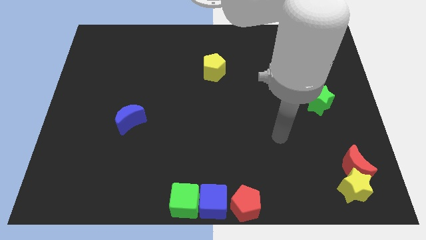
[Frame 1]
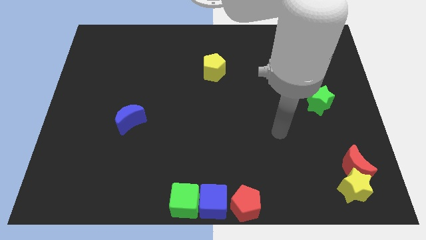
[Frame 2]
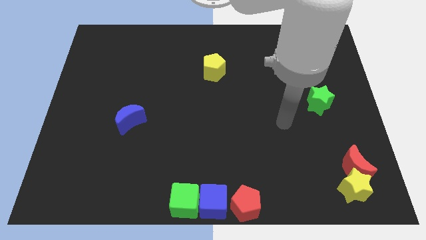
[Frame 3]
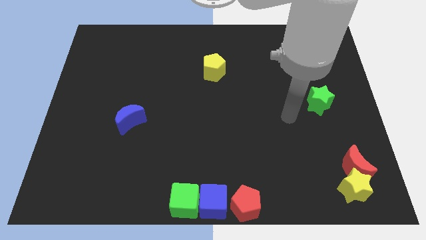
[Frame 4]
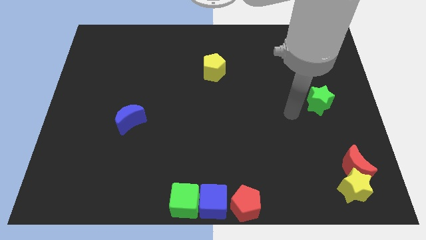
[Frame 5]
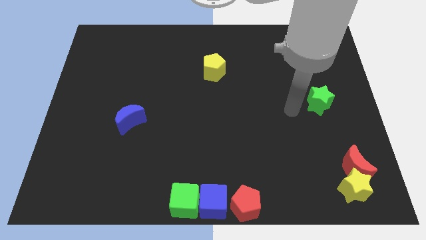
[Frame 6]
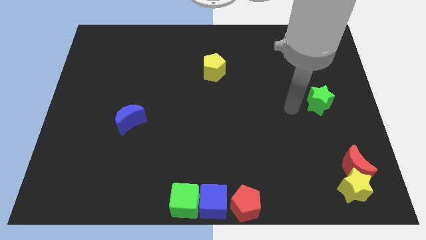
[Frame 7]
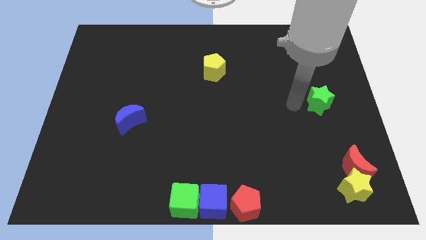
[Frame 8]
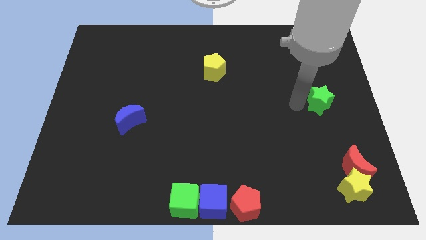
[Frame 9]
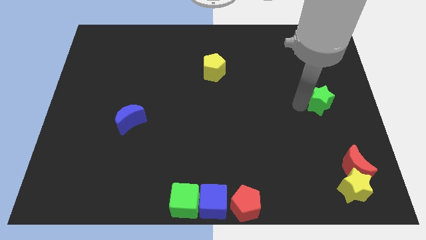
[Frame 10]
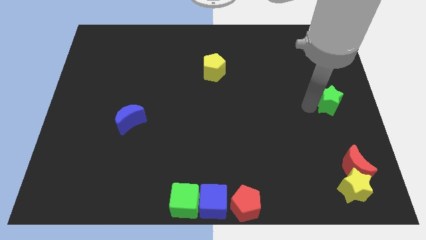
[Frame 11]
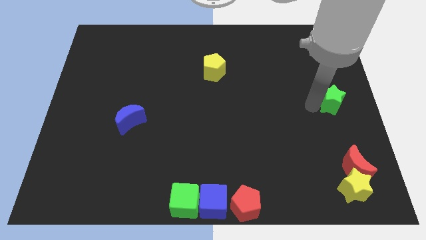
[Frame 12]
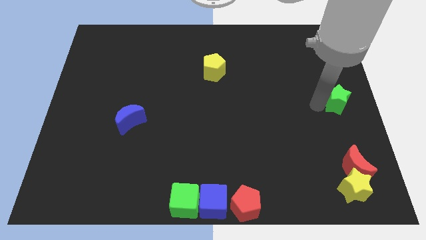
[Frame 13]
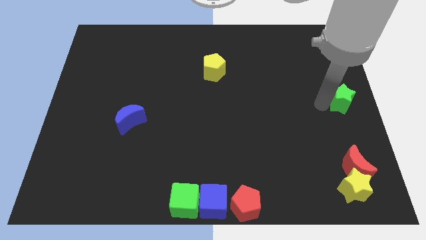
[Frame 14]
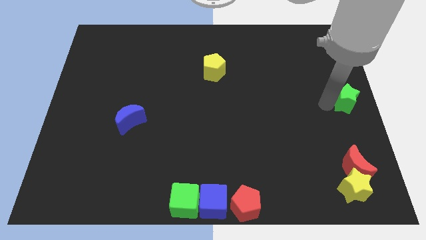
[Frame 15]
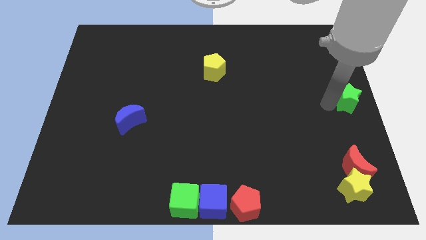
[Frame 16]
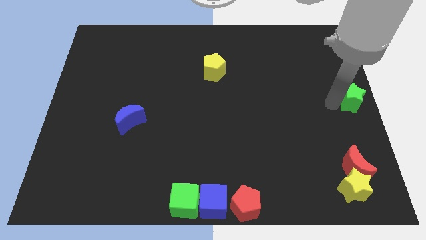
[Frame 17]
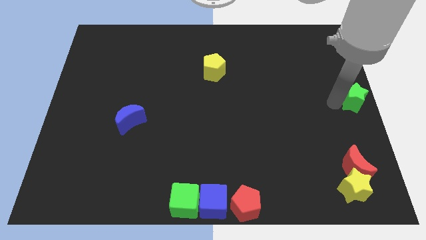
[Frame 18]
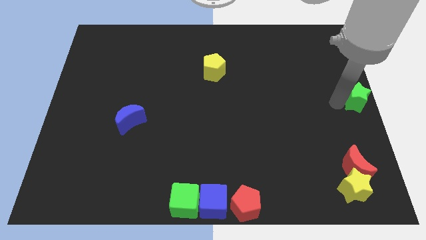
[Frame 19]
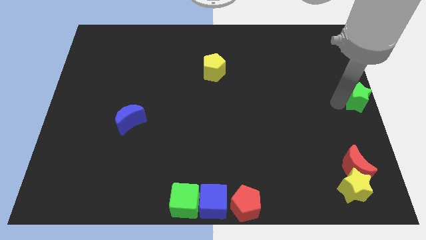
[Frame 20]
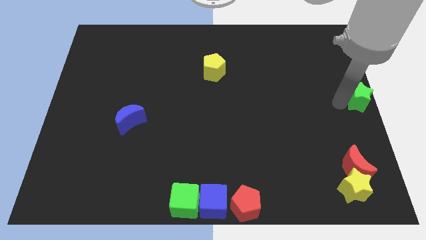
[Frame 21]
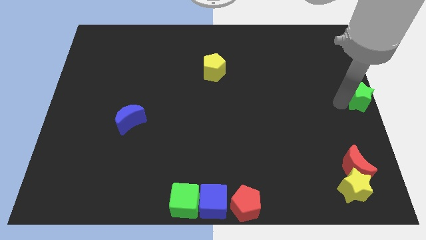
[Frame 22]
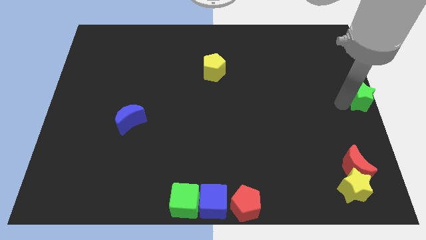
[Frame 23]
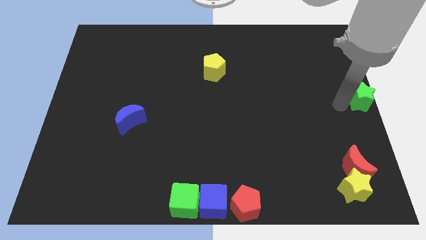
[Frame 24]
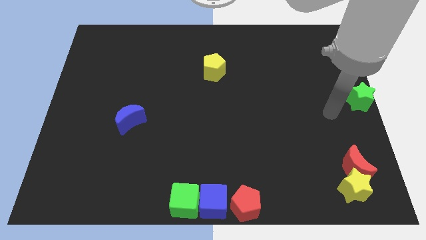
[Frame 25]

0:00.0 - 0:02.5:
move the green star to the center right

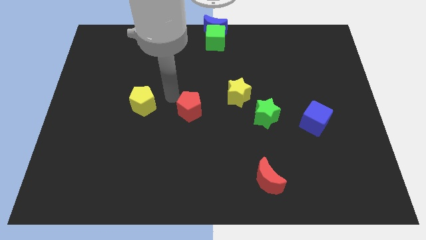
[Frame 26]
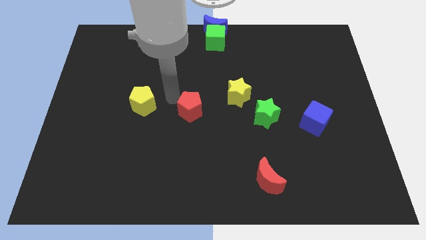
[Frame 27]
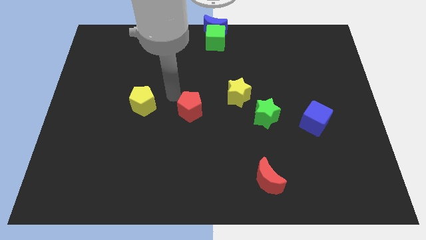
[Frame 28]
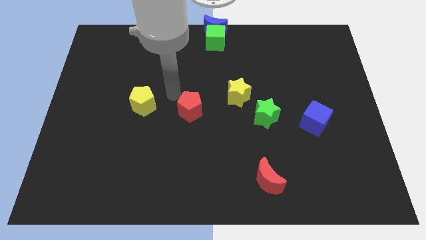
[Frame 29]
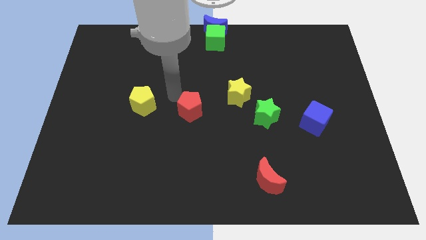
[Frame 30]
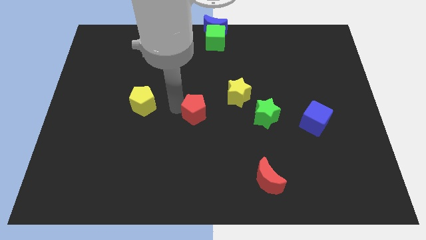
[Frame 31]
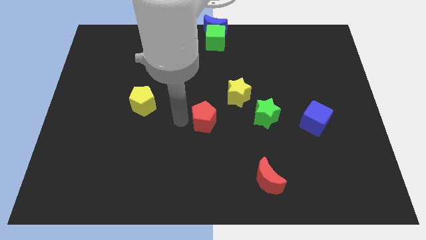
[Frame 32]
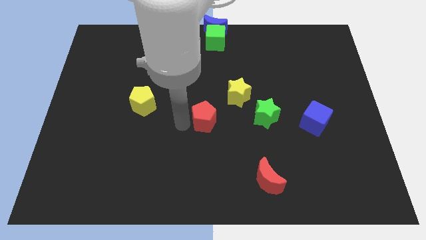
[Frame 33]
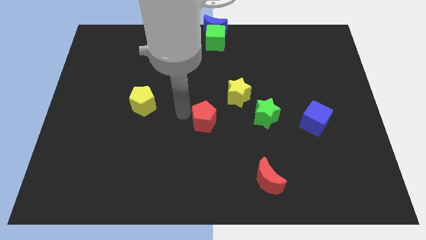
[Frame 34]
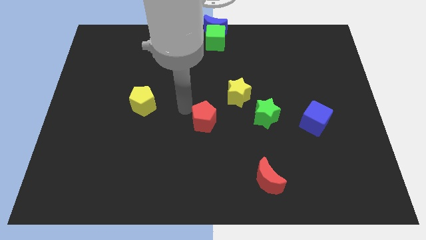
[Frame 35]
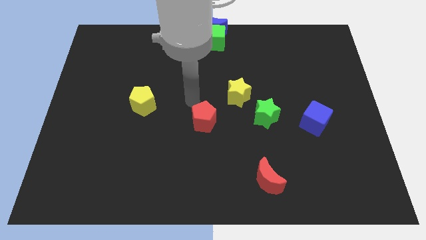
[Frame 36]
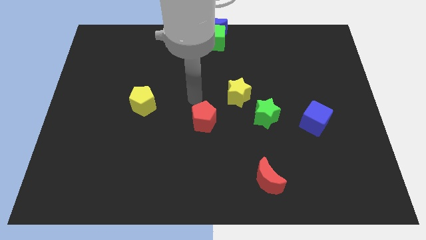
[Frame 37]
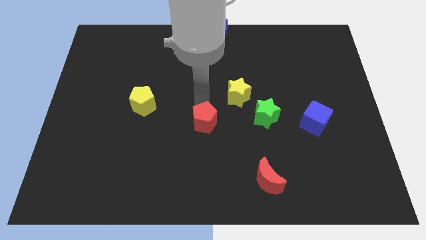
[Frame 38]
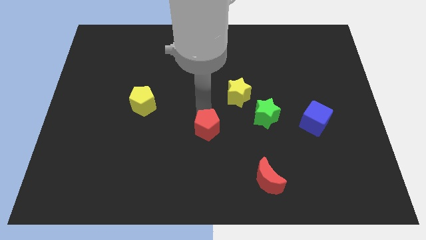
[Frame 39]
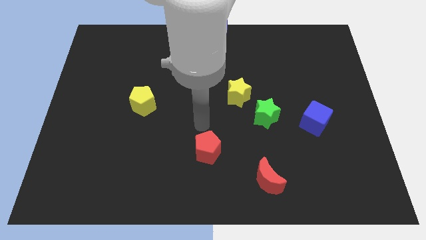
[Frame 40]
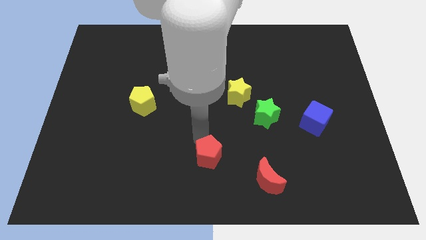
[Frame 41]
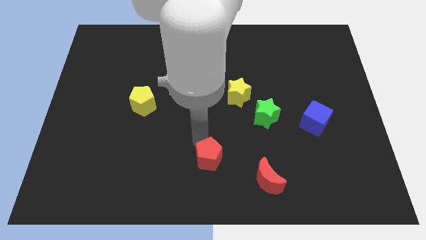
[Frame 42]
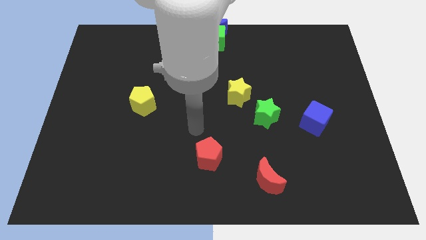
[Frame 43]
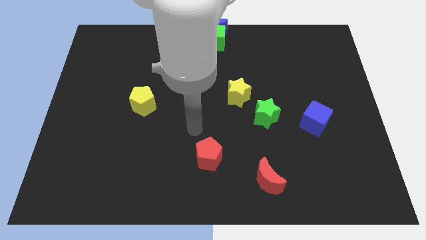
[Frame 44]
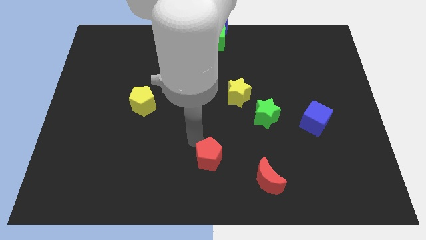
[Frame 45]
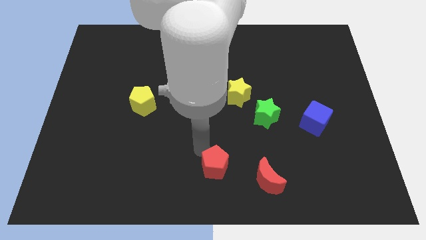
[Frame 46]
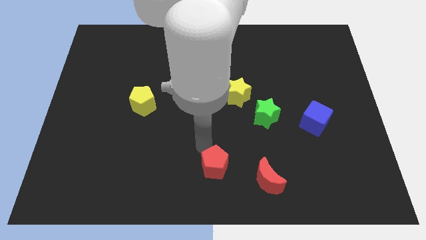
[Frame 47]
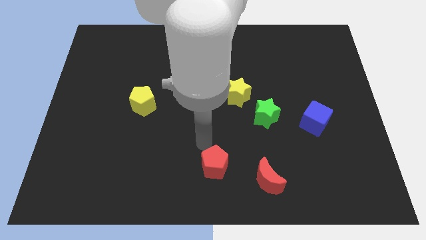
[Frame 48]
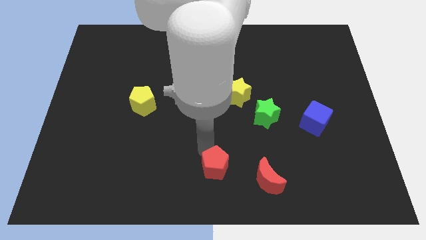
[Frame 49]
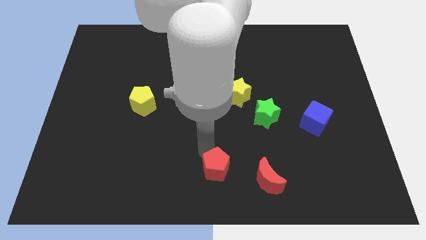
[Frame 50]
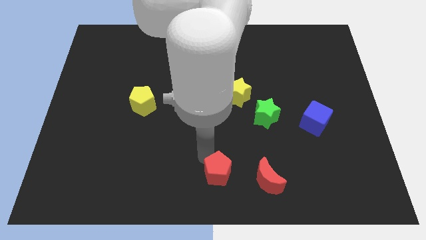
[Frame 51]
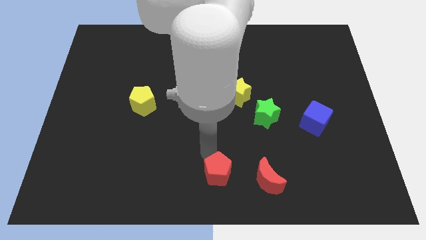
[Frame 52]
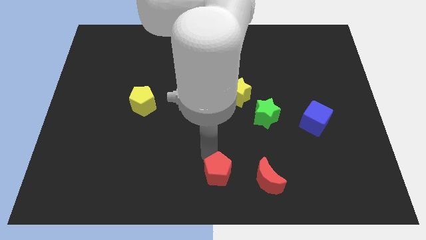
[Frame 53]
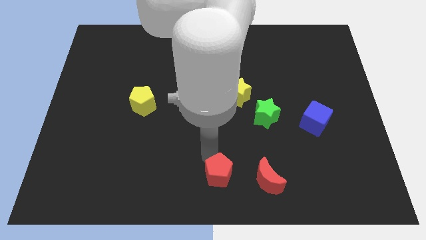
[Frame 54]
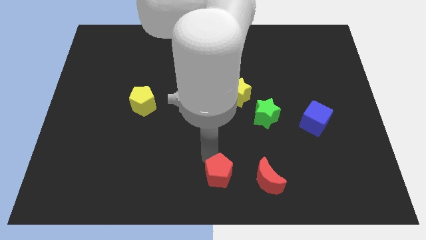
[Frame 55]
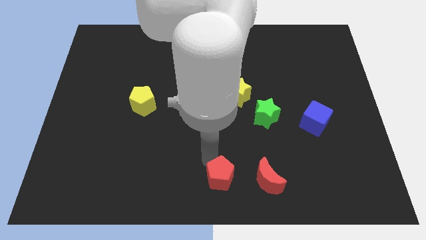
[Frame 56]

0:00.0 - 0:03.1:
push red pentagon to left of red moon

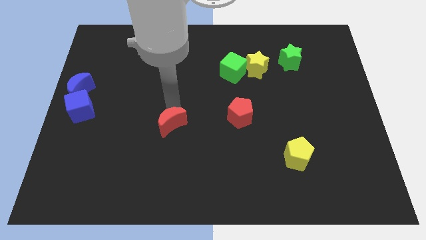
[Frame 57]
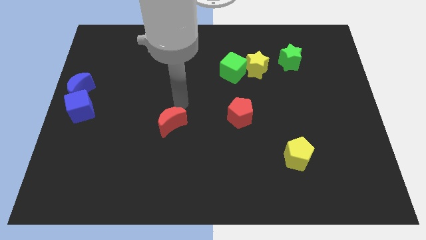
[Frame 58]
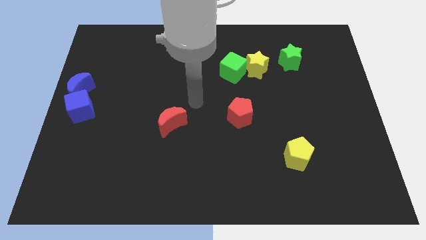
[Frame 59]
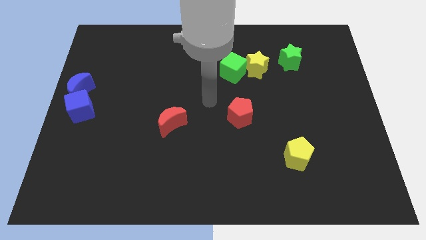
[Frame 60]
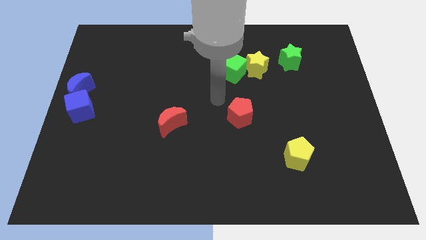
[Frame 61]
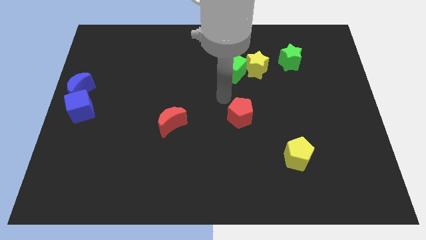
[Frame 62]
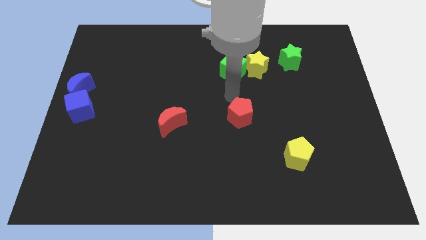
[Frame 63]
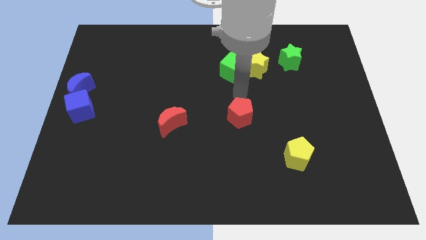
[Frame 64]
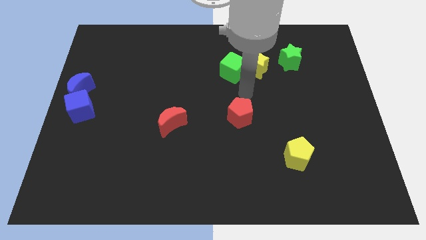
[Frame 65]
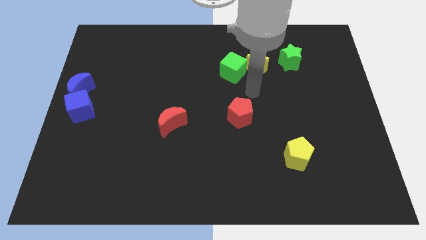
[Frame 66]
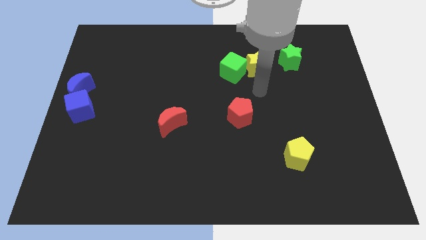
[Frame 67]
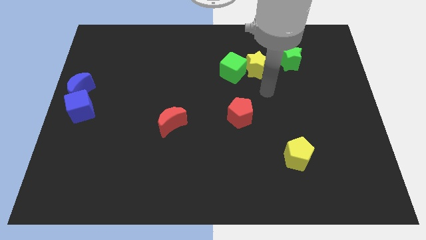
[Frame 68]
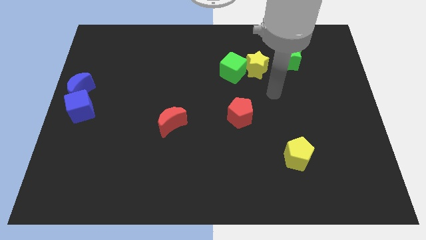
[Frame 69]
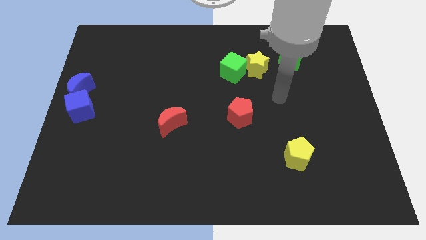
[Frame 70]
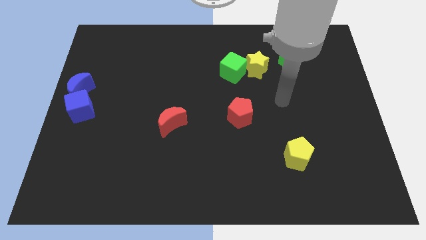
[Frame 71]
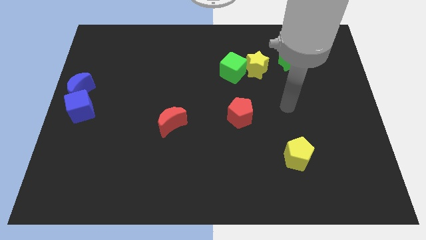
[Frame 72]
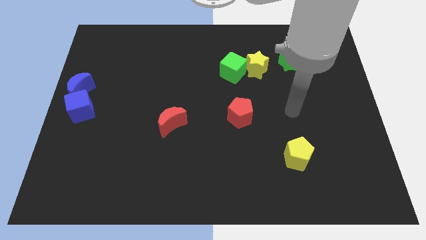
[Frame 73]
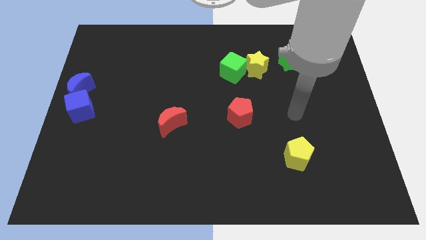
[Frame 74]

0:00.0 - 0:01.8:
place the arm to the right of the red pentagon

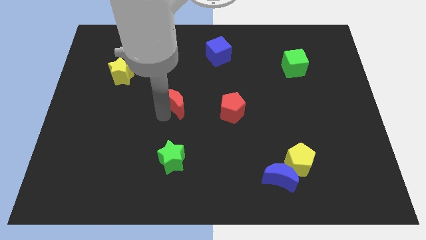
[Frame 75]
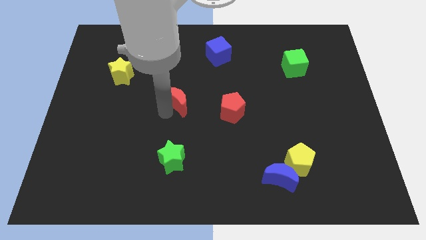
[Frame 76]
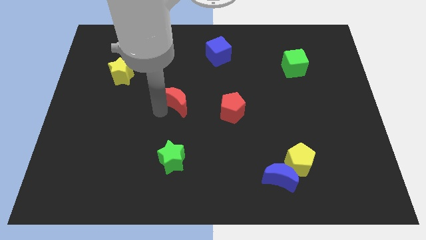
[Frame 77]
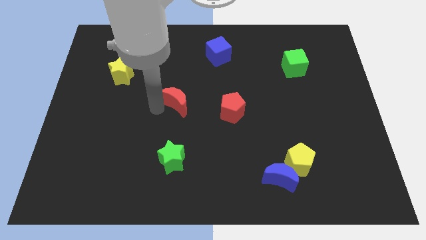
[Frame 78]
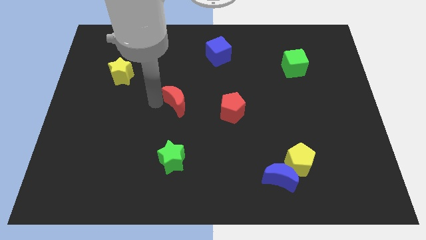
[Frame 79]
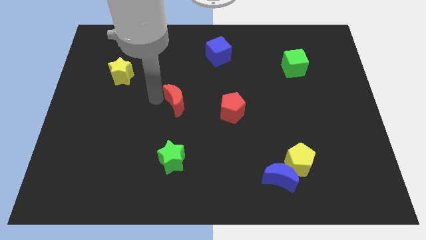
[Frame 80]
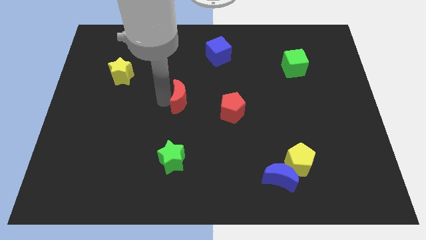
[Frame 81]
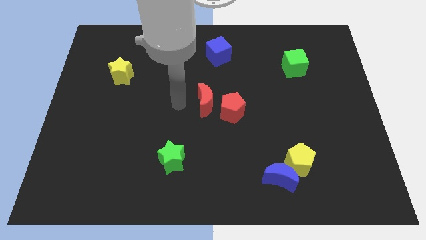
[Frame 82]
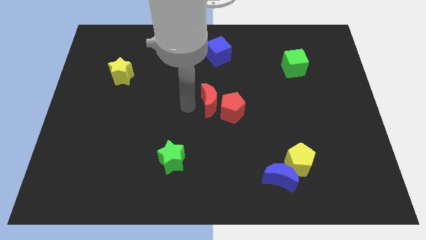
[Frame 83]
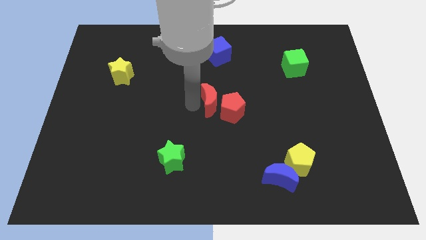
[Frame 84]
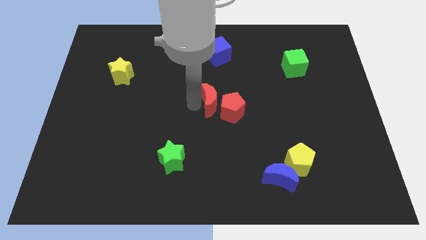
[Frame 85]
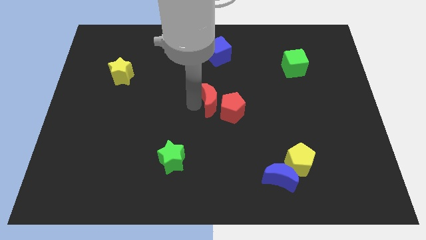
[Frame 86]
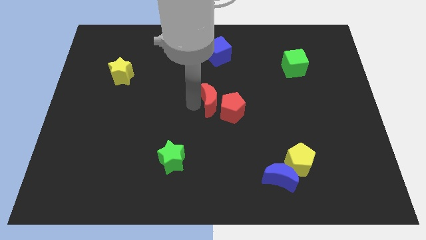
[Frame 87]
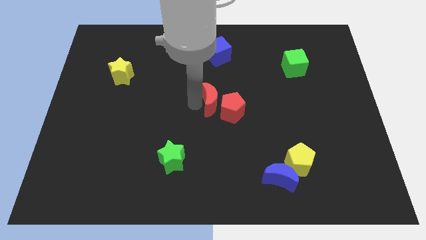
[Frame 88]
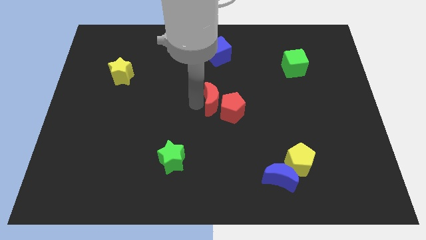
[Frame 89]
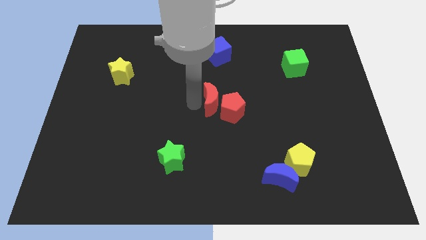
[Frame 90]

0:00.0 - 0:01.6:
move the red crescent left to the red pentagon
